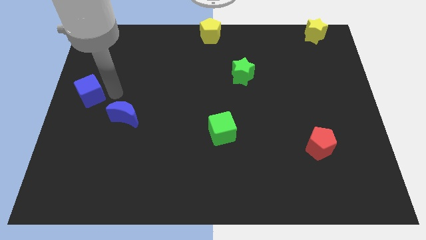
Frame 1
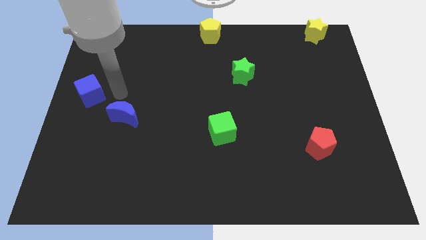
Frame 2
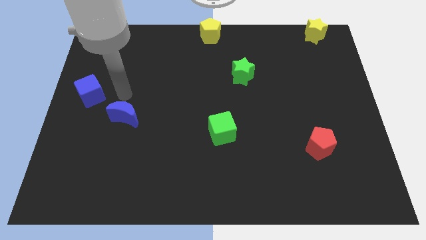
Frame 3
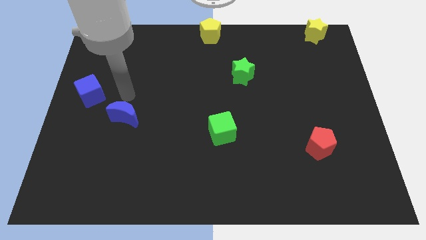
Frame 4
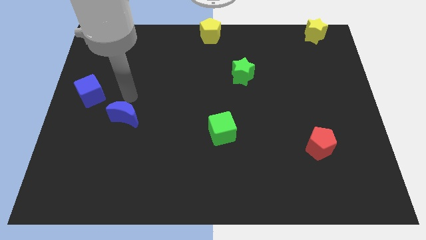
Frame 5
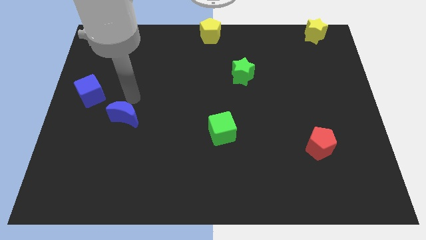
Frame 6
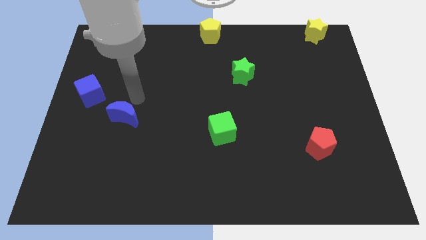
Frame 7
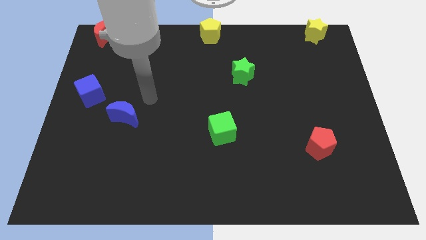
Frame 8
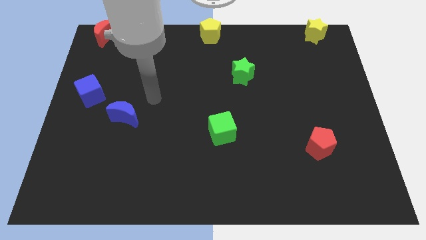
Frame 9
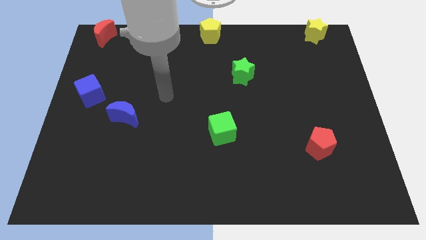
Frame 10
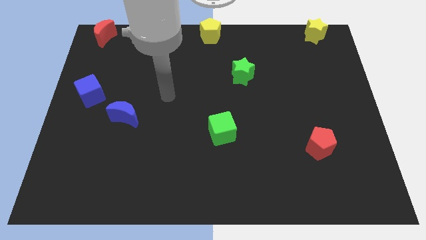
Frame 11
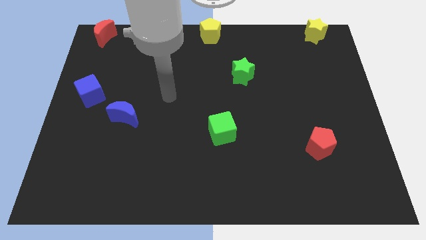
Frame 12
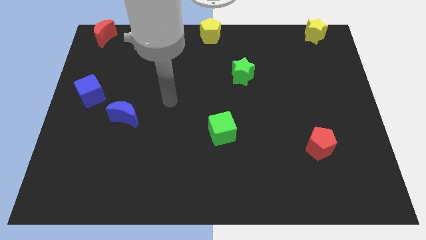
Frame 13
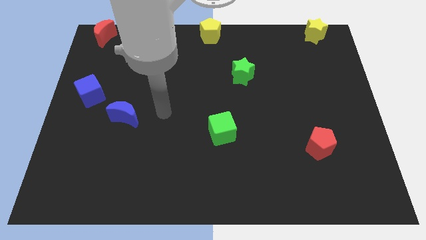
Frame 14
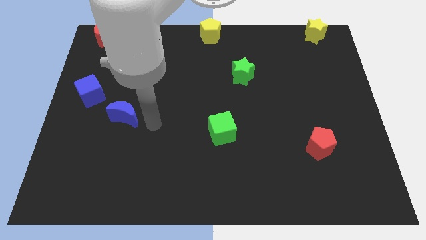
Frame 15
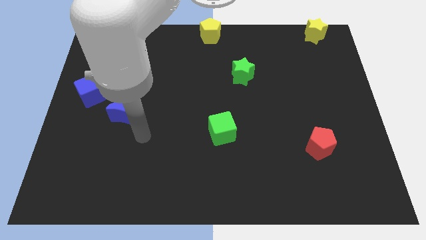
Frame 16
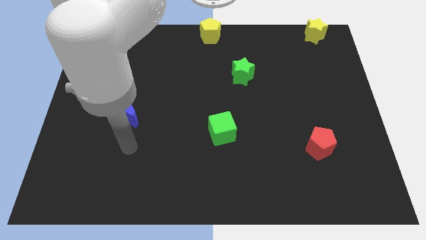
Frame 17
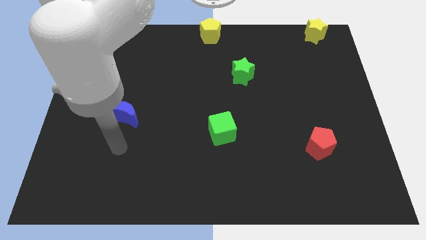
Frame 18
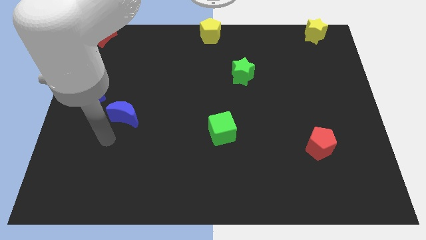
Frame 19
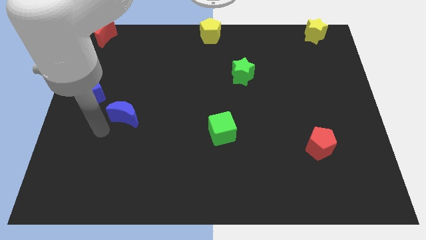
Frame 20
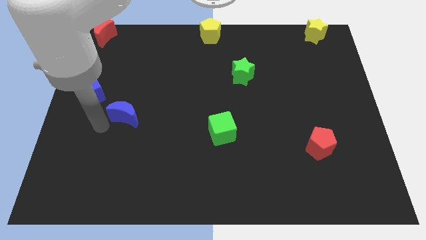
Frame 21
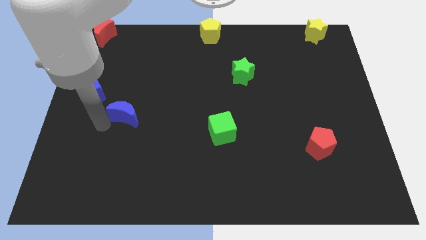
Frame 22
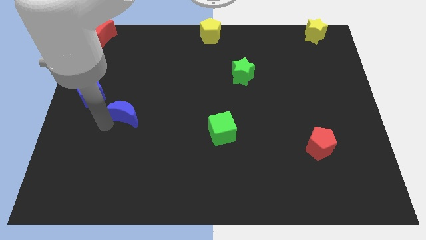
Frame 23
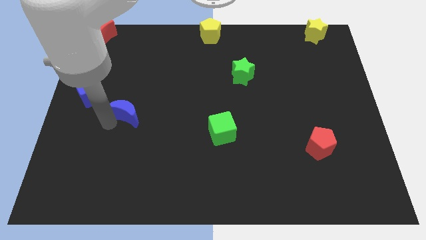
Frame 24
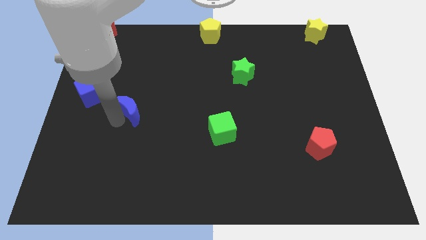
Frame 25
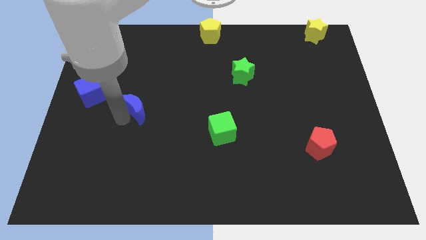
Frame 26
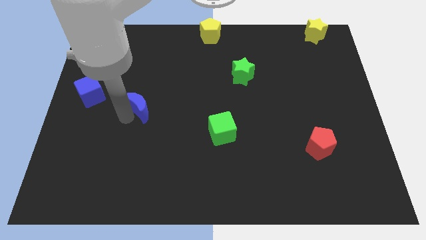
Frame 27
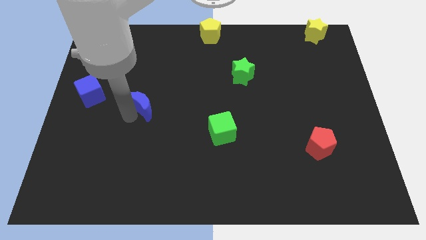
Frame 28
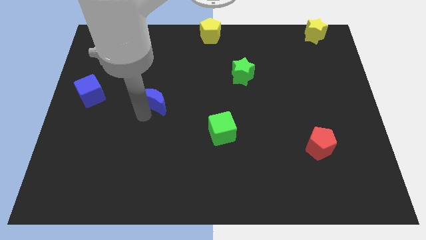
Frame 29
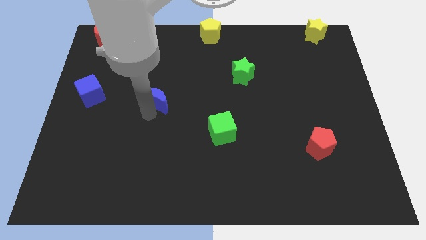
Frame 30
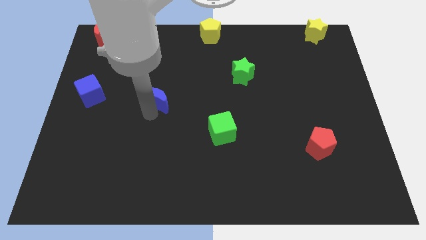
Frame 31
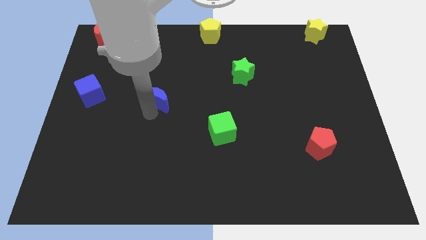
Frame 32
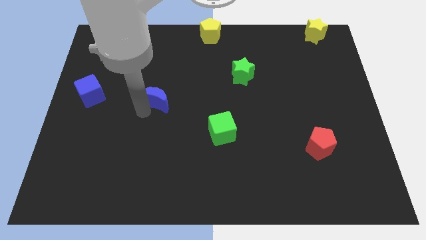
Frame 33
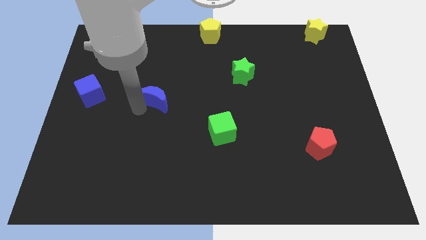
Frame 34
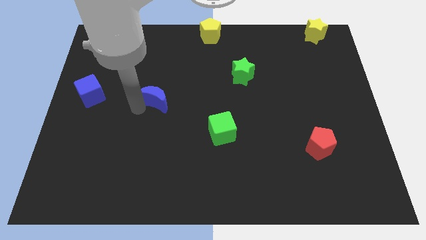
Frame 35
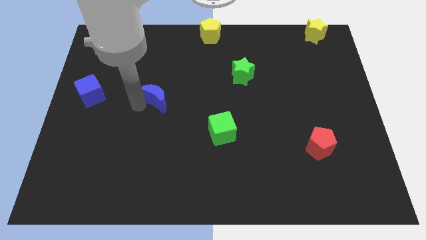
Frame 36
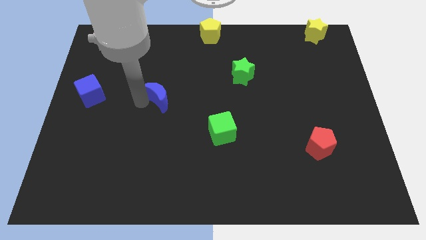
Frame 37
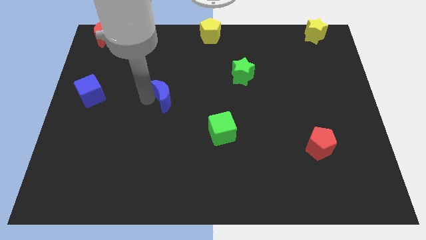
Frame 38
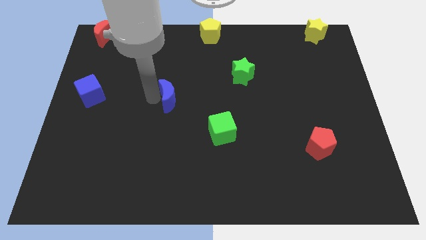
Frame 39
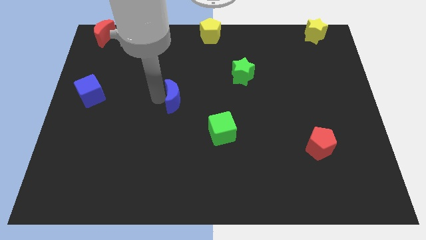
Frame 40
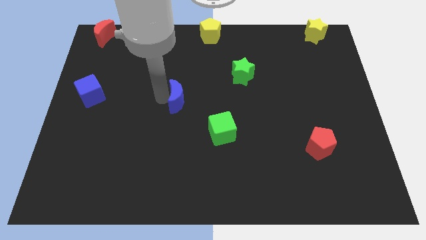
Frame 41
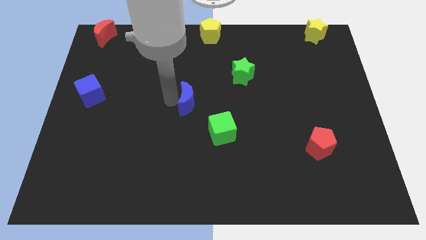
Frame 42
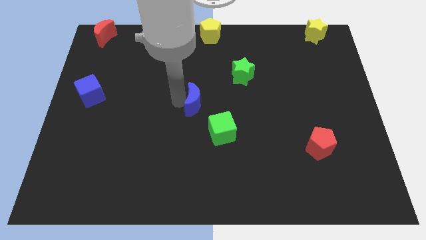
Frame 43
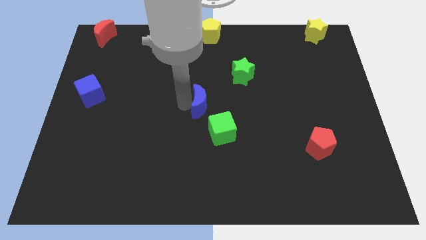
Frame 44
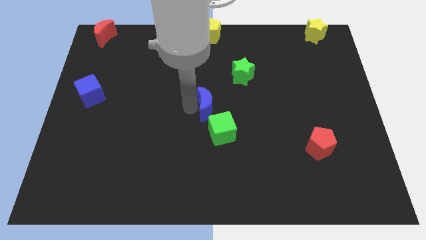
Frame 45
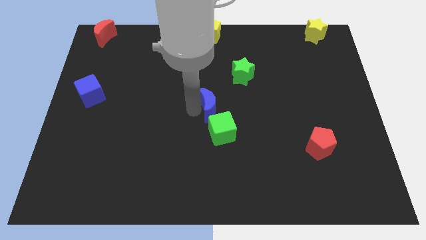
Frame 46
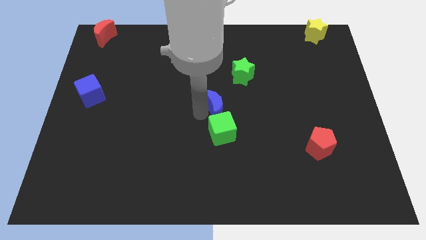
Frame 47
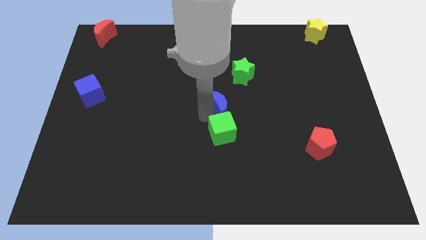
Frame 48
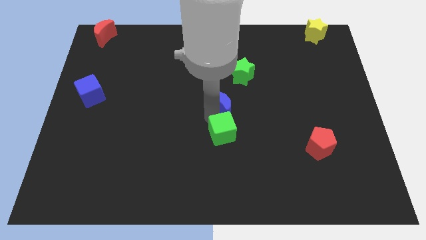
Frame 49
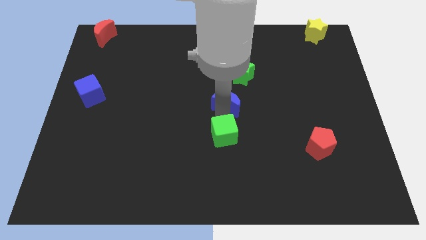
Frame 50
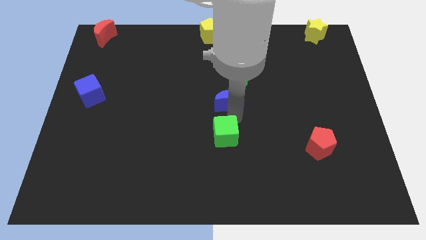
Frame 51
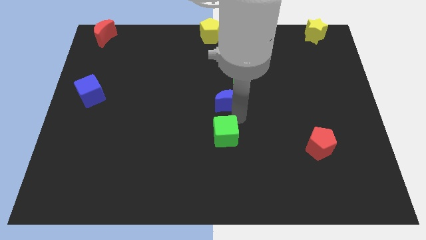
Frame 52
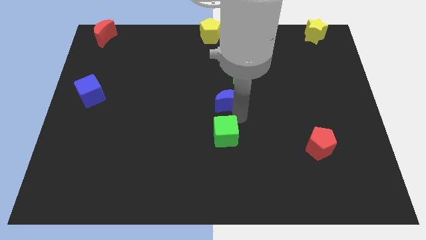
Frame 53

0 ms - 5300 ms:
place the blue moon above the green cube

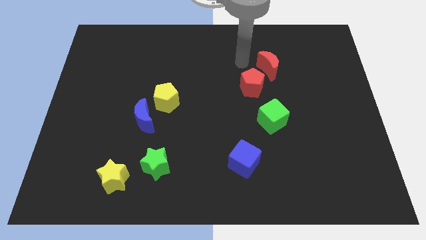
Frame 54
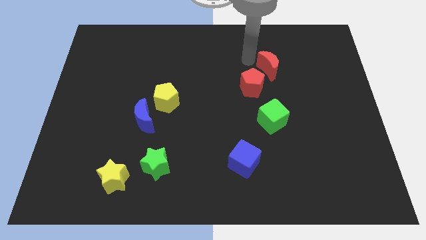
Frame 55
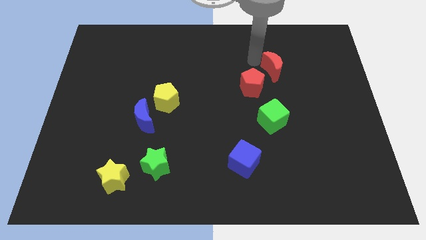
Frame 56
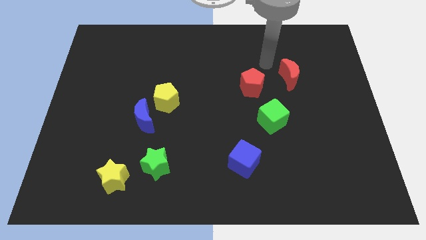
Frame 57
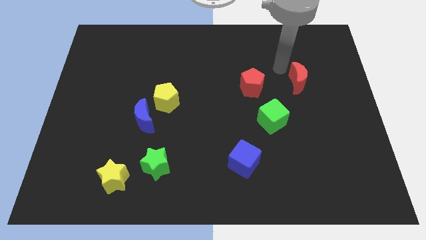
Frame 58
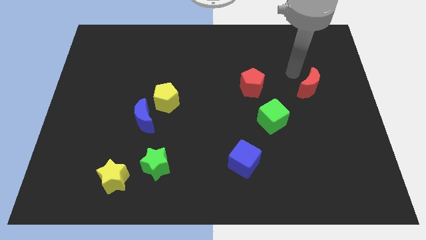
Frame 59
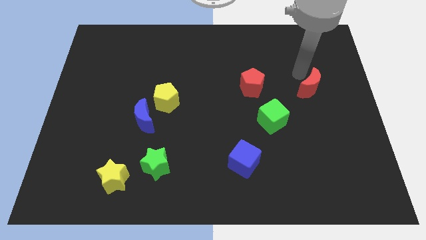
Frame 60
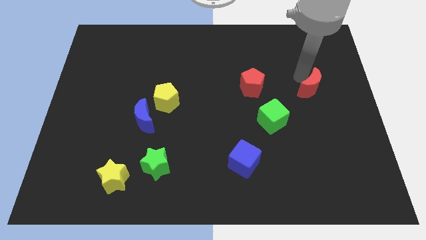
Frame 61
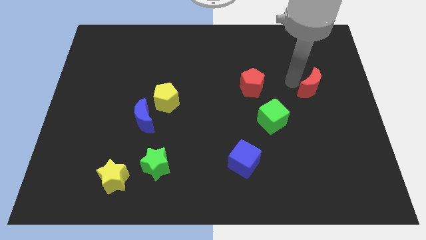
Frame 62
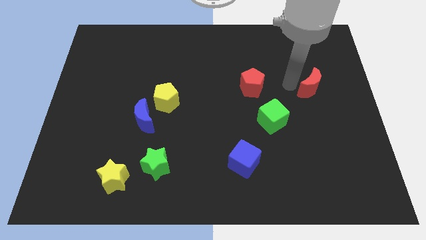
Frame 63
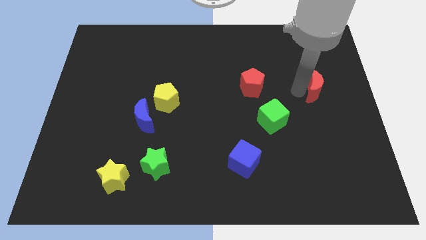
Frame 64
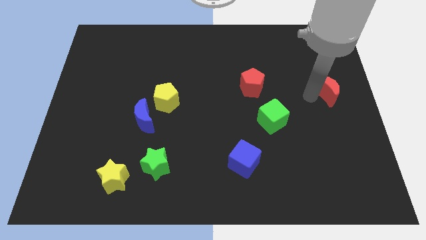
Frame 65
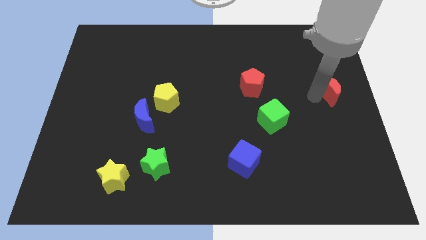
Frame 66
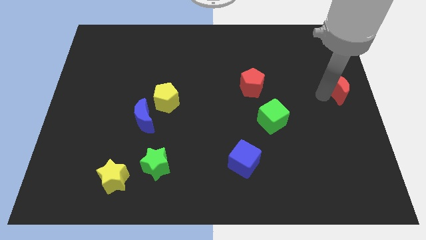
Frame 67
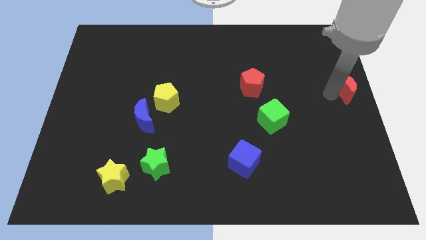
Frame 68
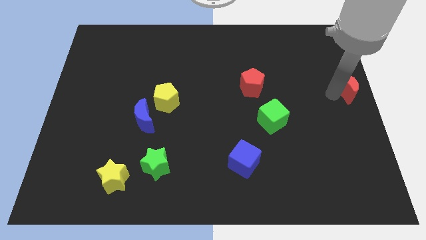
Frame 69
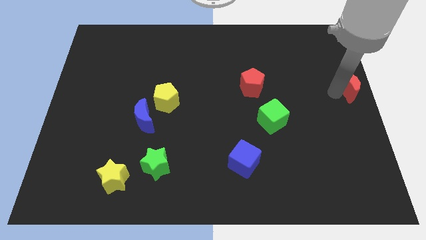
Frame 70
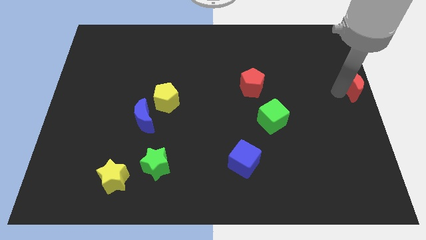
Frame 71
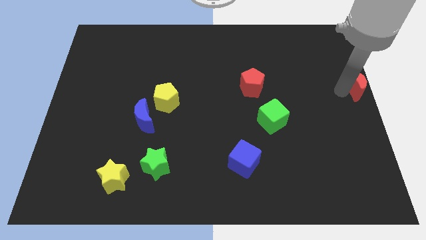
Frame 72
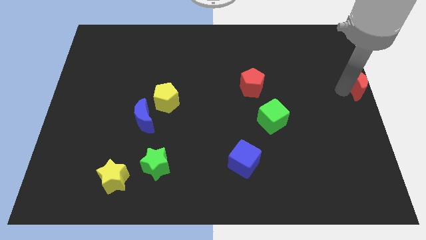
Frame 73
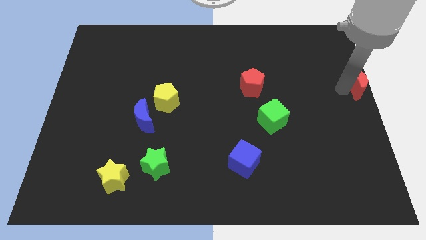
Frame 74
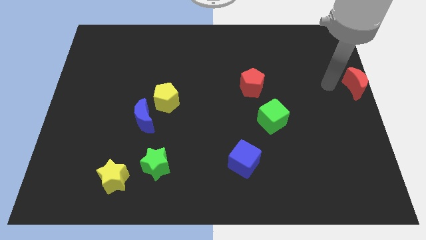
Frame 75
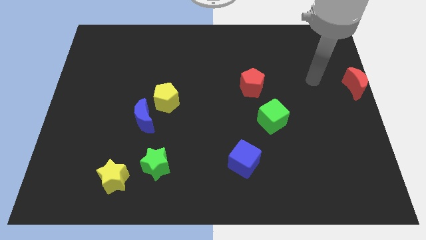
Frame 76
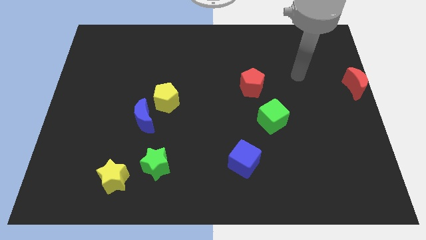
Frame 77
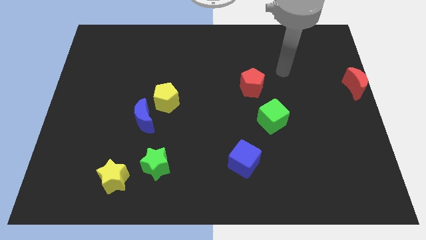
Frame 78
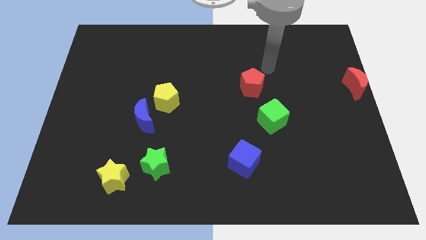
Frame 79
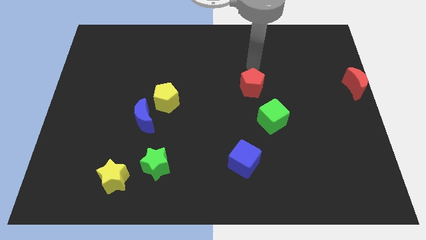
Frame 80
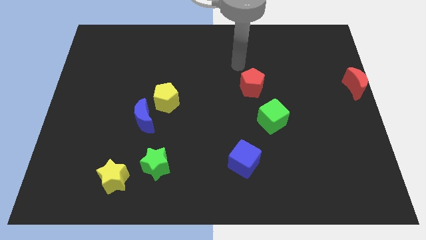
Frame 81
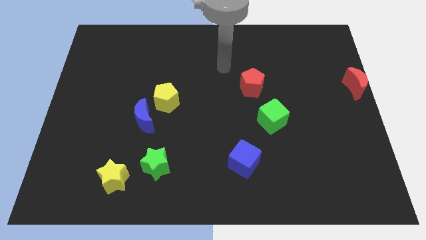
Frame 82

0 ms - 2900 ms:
place the red moon to the center right

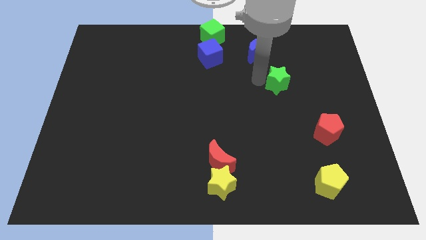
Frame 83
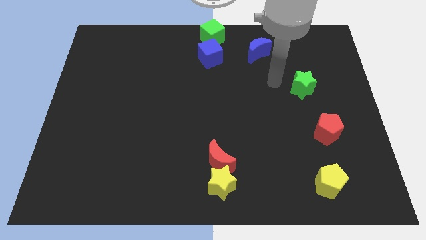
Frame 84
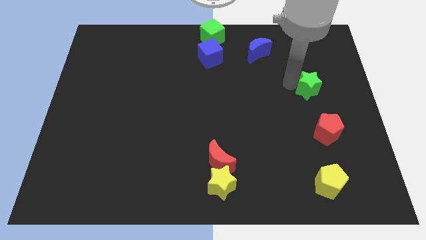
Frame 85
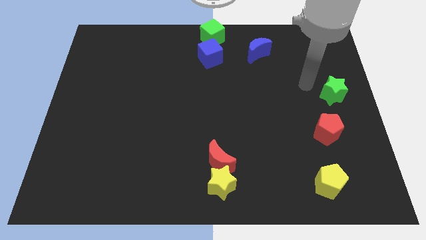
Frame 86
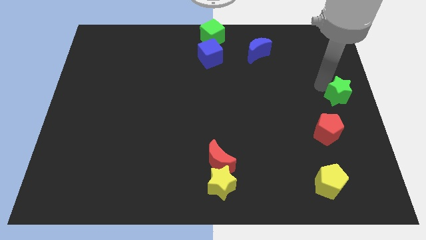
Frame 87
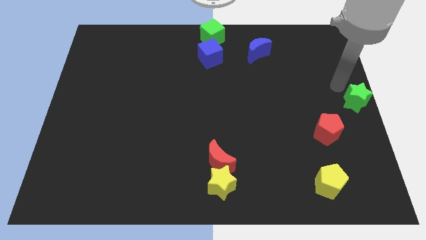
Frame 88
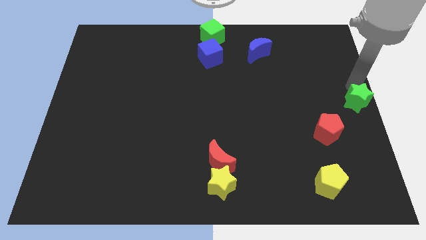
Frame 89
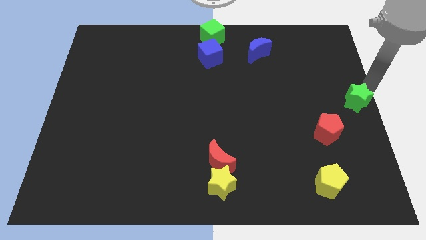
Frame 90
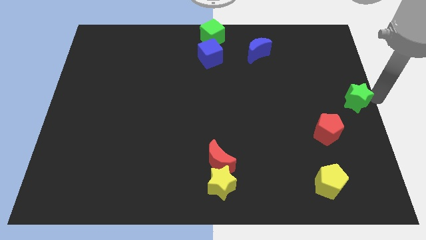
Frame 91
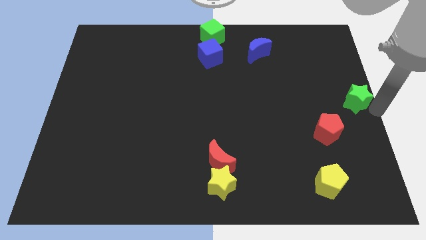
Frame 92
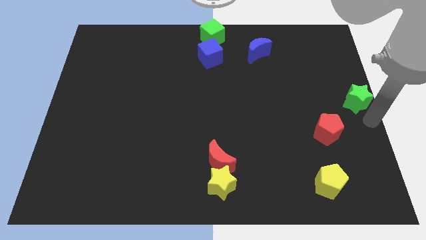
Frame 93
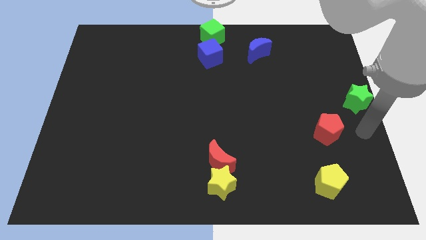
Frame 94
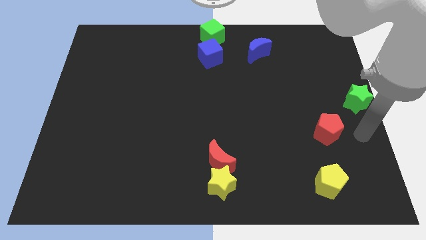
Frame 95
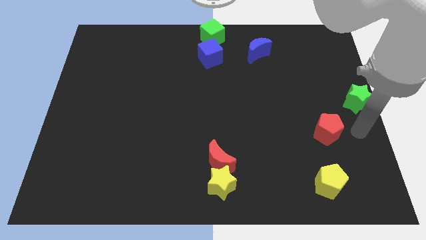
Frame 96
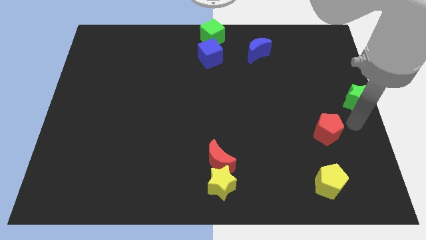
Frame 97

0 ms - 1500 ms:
push the green star to the right
